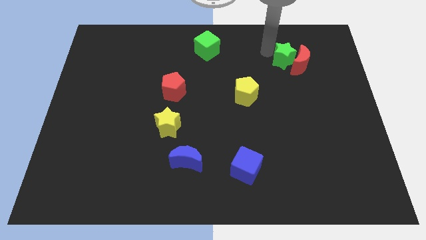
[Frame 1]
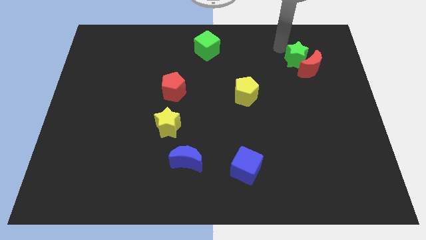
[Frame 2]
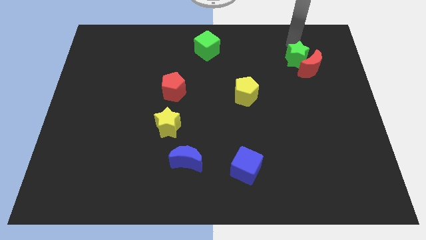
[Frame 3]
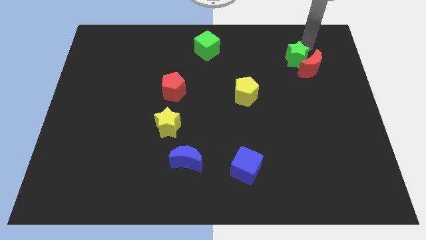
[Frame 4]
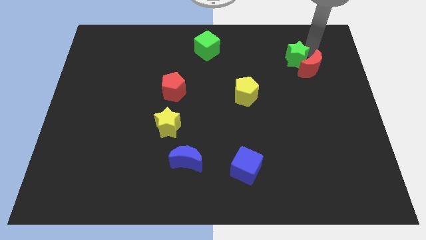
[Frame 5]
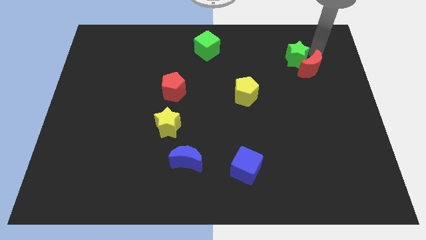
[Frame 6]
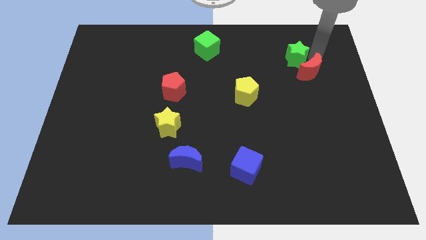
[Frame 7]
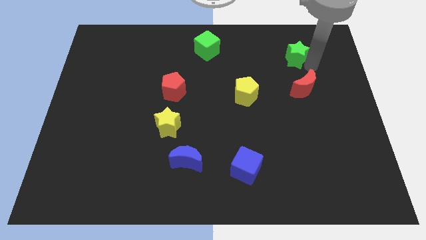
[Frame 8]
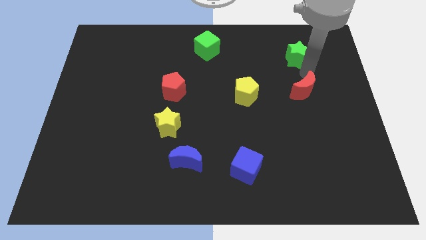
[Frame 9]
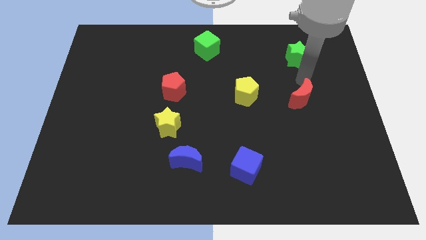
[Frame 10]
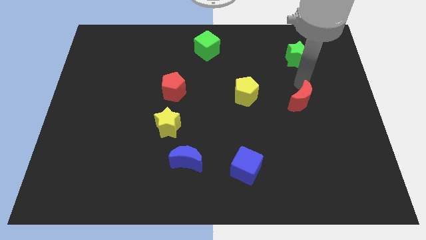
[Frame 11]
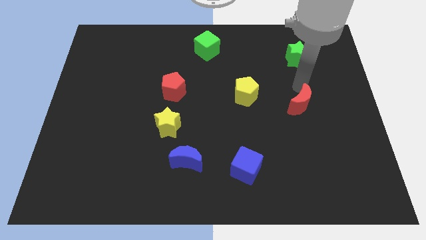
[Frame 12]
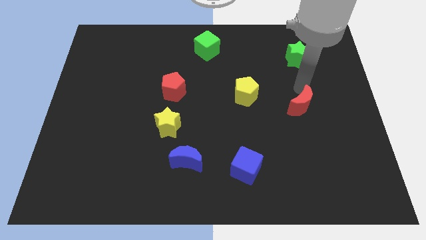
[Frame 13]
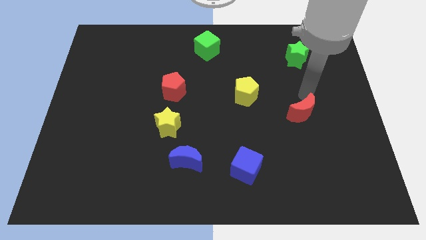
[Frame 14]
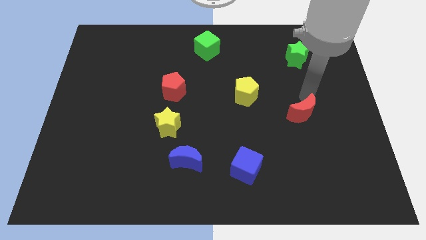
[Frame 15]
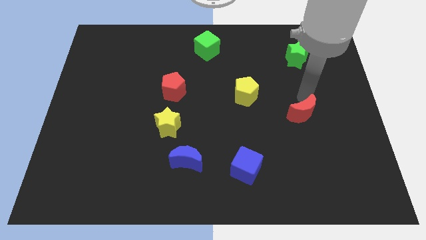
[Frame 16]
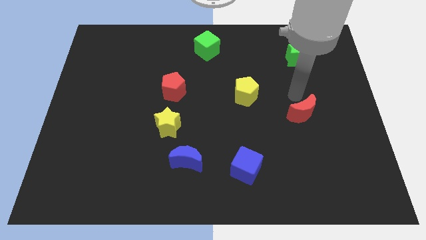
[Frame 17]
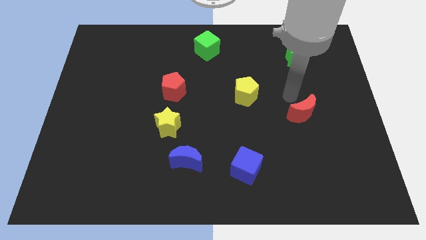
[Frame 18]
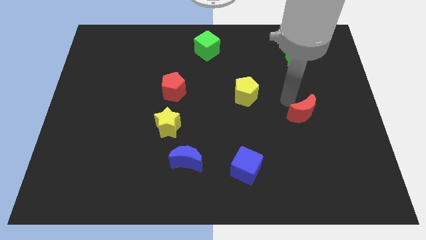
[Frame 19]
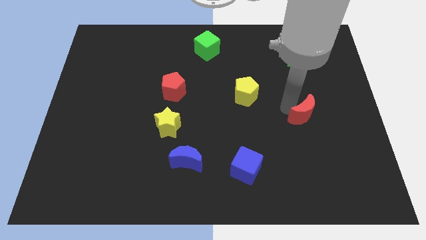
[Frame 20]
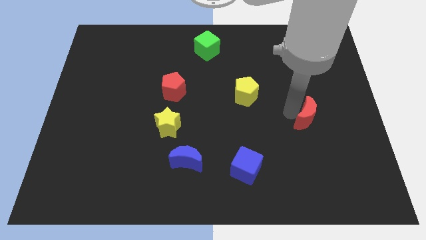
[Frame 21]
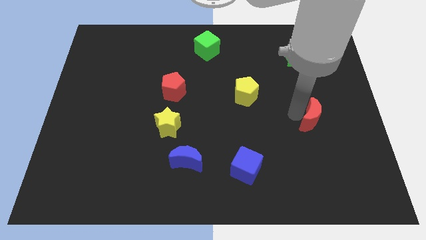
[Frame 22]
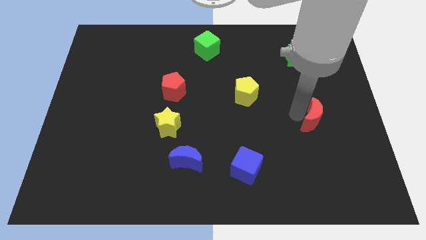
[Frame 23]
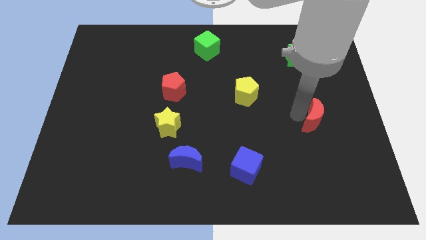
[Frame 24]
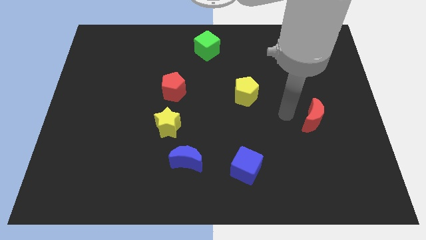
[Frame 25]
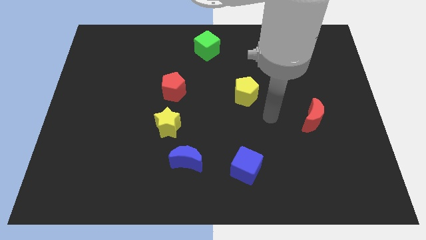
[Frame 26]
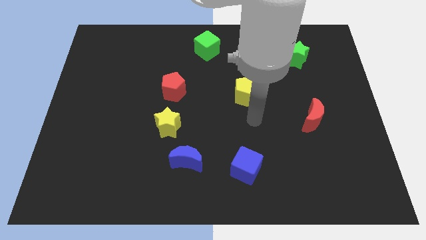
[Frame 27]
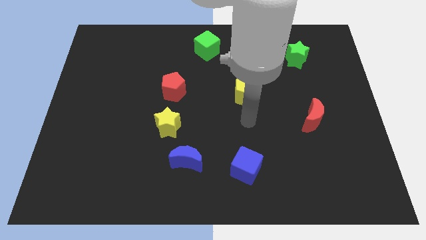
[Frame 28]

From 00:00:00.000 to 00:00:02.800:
separate the red moon from the green star

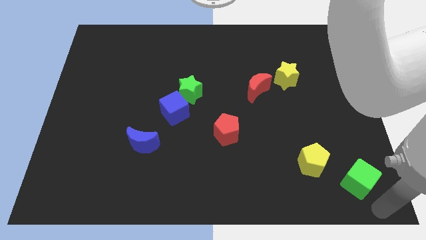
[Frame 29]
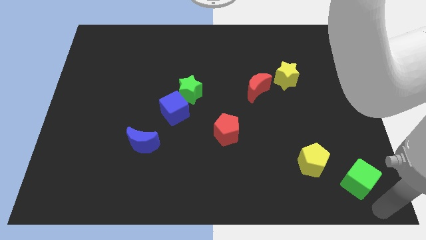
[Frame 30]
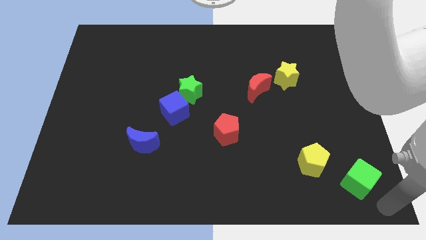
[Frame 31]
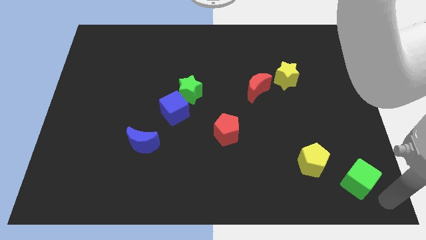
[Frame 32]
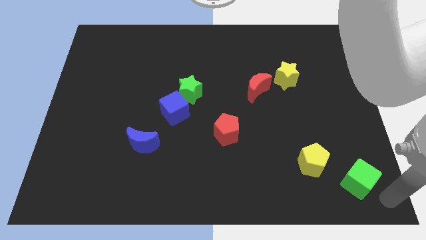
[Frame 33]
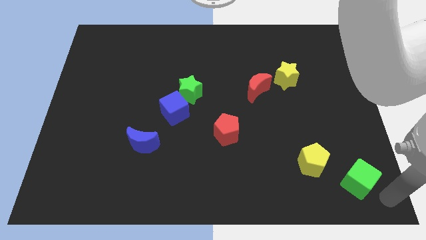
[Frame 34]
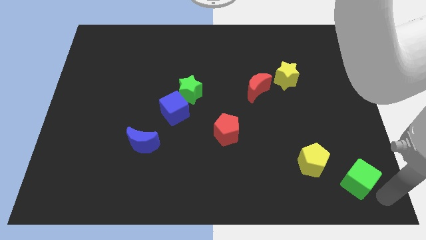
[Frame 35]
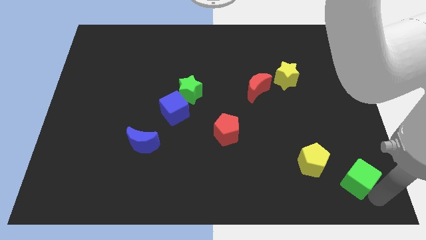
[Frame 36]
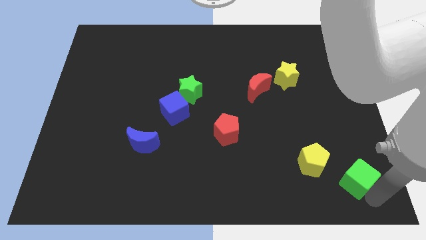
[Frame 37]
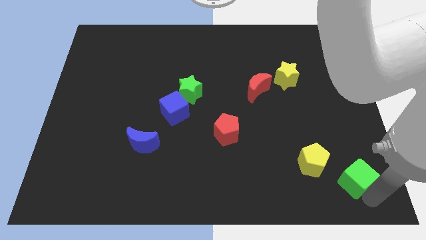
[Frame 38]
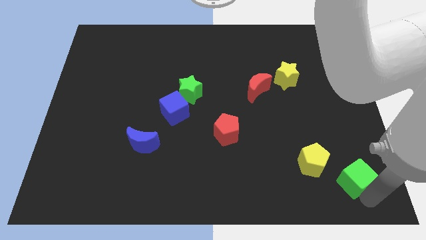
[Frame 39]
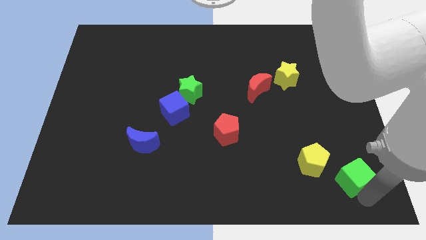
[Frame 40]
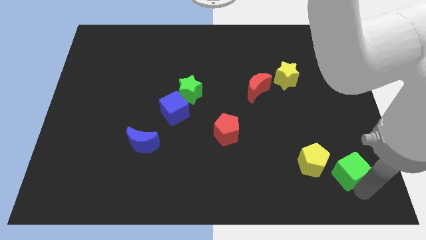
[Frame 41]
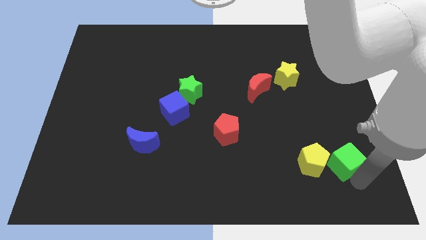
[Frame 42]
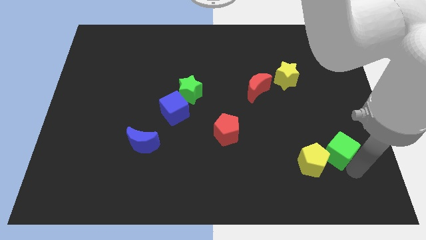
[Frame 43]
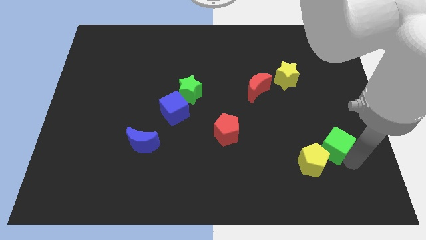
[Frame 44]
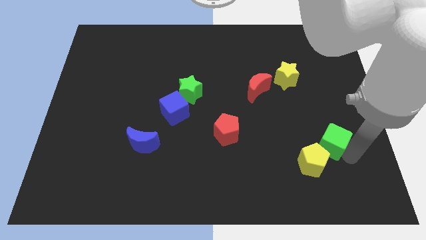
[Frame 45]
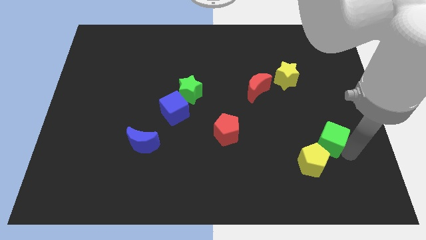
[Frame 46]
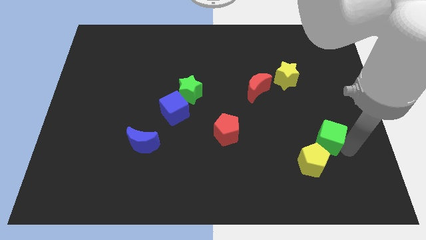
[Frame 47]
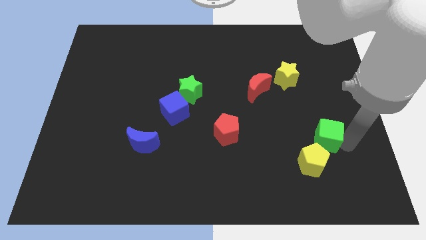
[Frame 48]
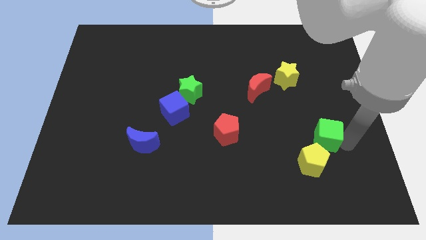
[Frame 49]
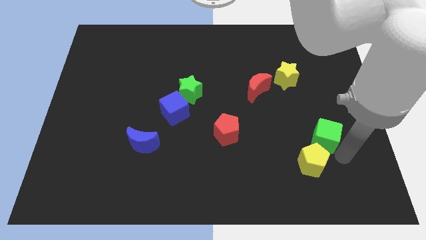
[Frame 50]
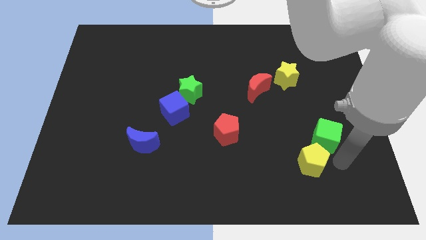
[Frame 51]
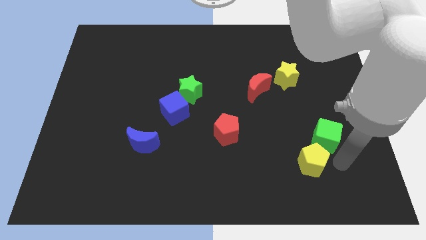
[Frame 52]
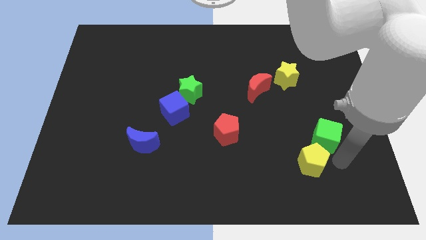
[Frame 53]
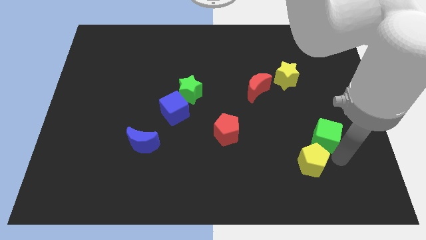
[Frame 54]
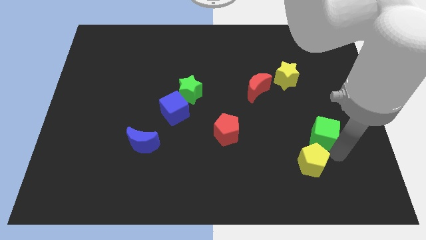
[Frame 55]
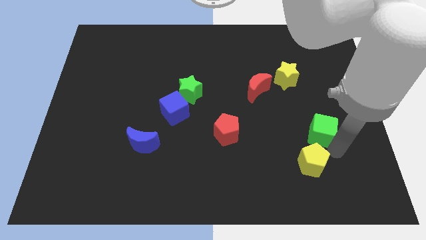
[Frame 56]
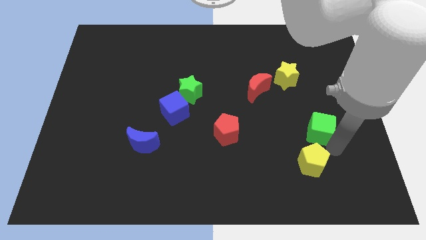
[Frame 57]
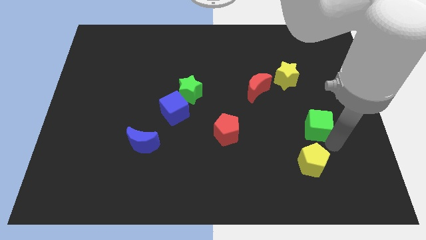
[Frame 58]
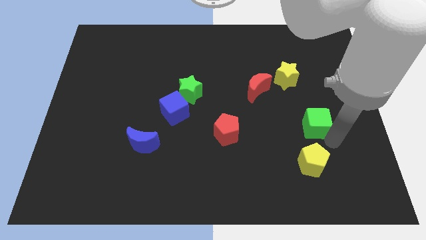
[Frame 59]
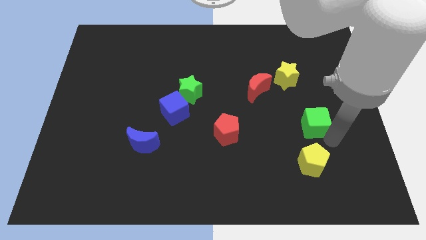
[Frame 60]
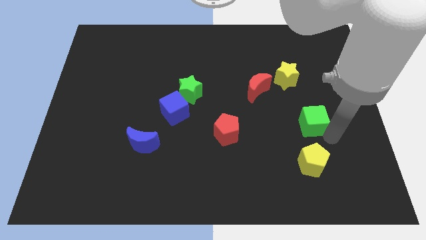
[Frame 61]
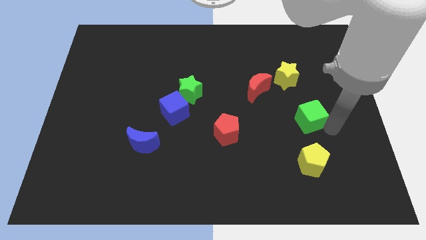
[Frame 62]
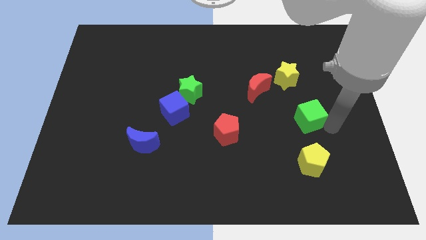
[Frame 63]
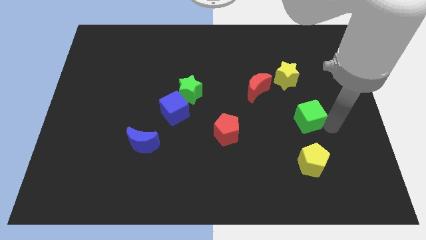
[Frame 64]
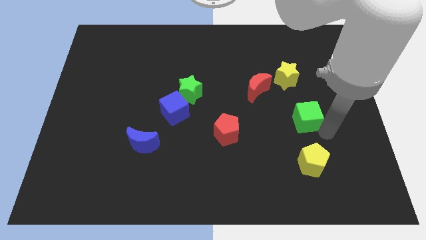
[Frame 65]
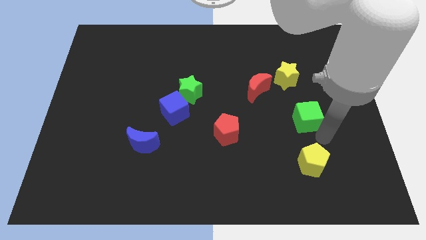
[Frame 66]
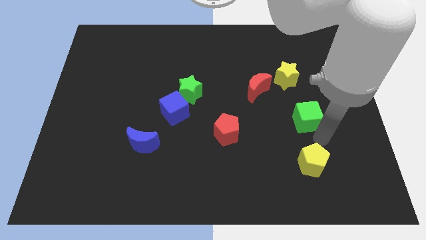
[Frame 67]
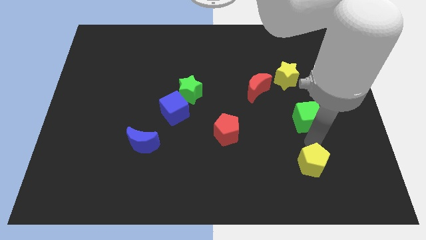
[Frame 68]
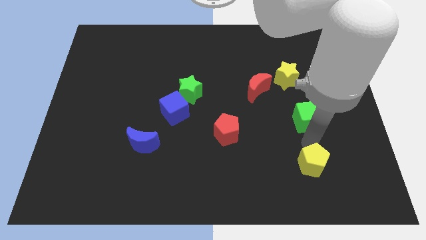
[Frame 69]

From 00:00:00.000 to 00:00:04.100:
move green cube above yellow pentagon

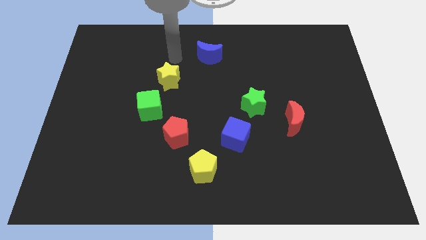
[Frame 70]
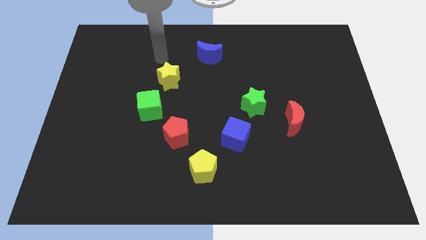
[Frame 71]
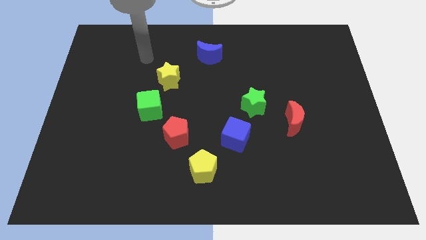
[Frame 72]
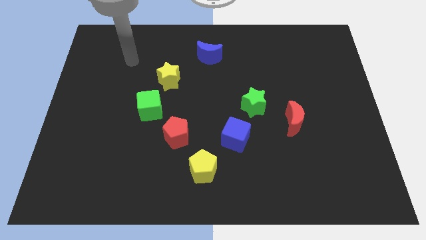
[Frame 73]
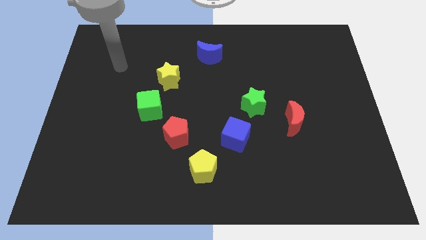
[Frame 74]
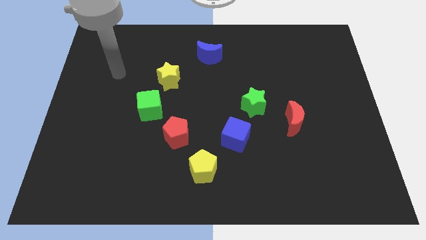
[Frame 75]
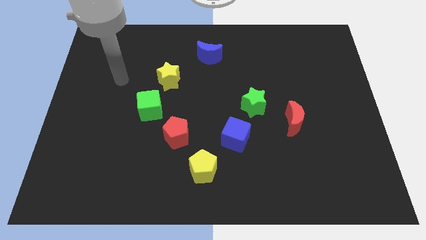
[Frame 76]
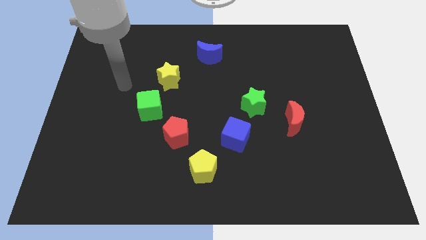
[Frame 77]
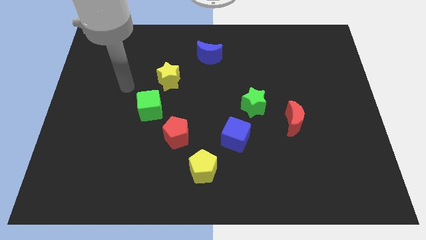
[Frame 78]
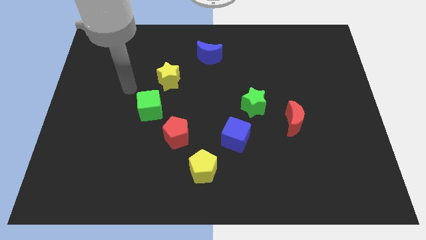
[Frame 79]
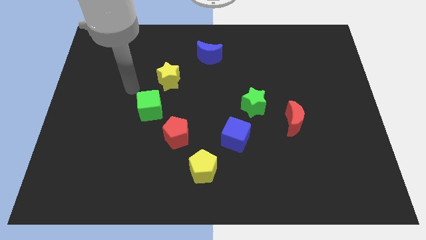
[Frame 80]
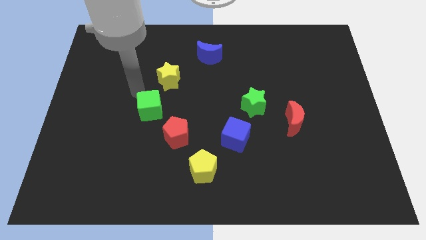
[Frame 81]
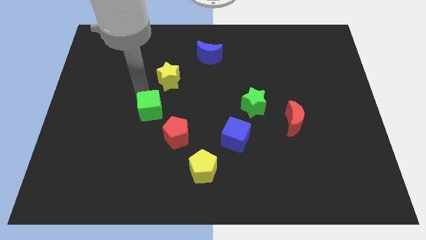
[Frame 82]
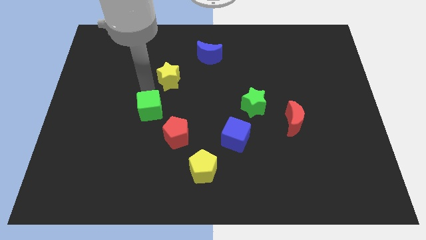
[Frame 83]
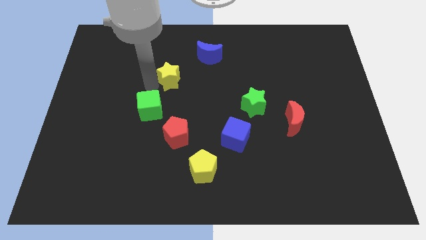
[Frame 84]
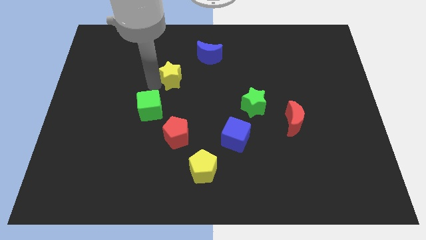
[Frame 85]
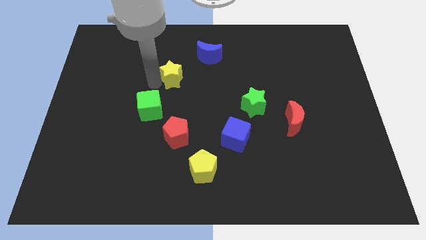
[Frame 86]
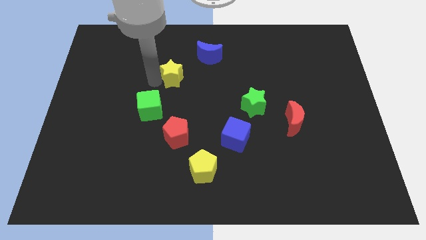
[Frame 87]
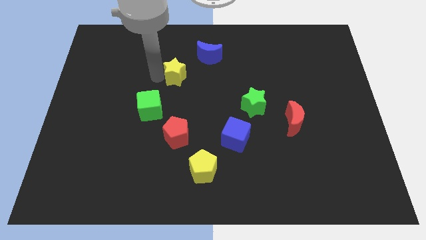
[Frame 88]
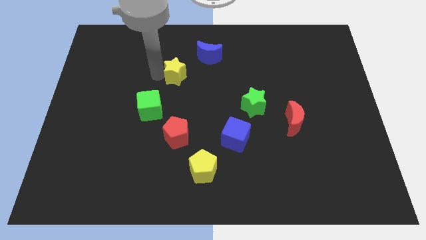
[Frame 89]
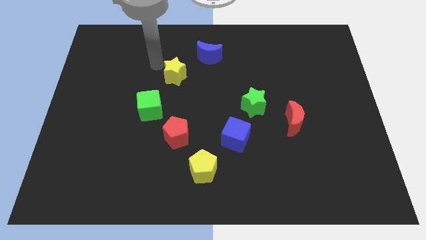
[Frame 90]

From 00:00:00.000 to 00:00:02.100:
push the yellow star in between the blue crescent and green cube
